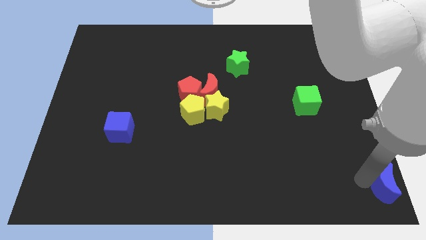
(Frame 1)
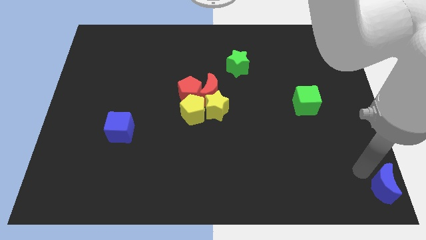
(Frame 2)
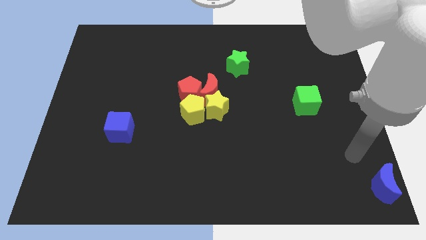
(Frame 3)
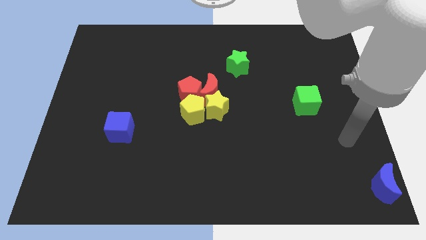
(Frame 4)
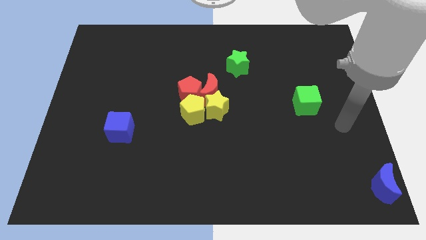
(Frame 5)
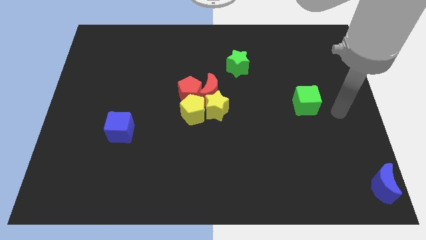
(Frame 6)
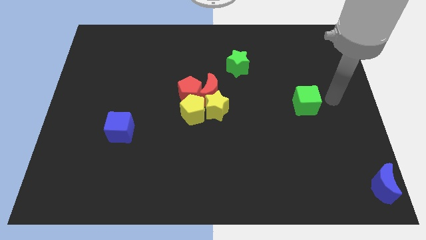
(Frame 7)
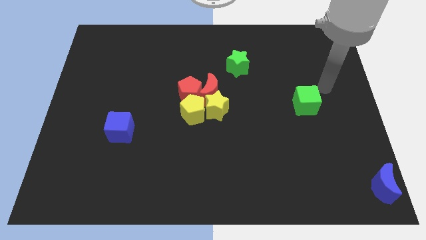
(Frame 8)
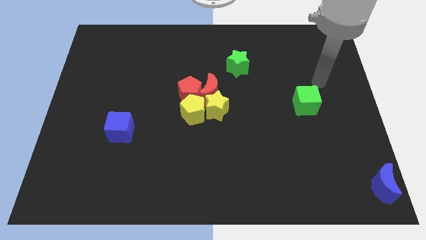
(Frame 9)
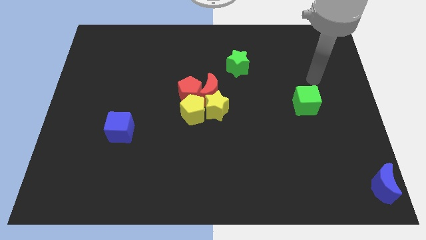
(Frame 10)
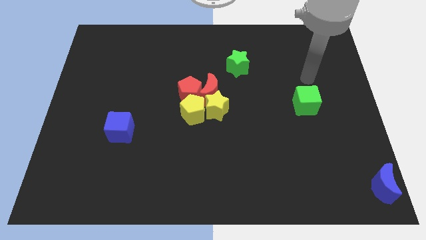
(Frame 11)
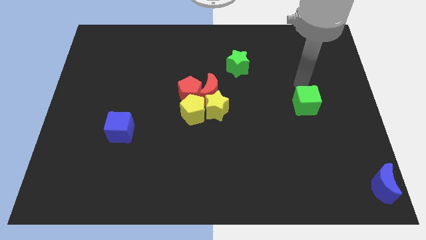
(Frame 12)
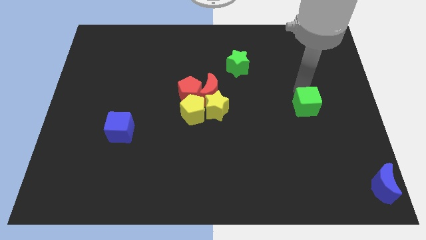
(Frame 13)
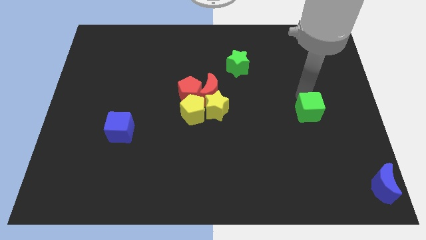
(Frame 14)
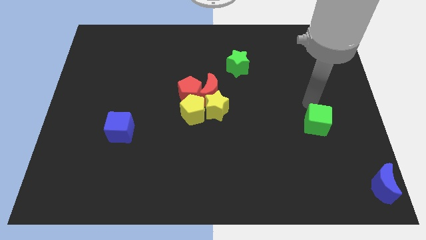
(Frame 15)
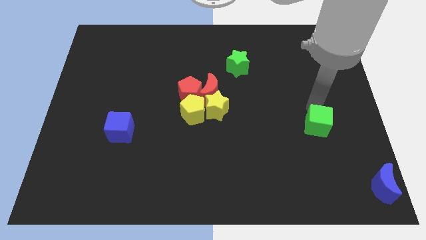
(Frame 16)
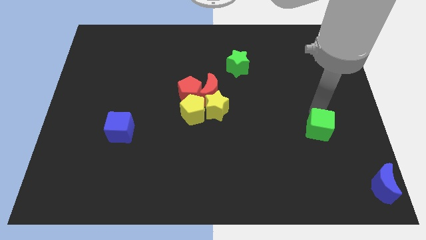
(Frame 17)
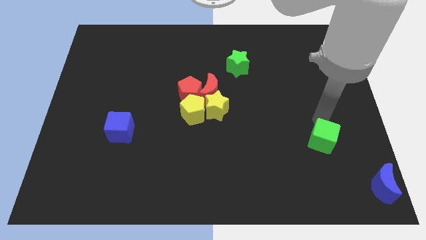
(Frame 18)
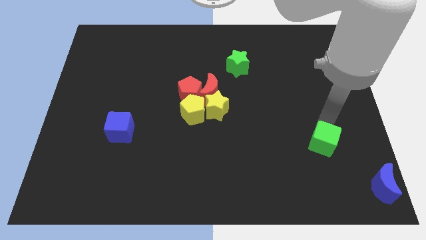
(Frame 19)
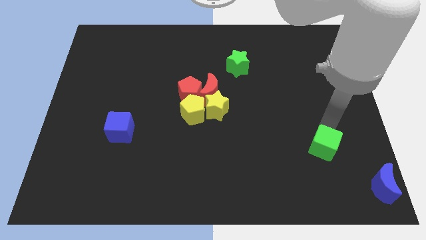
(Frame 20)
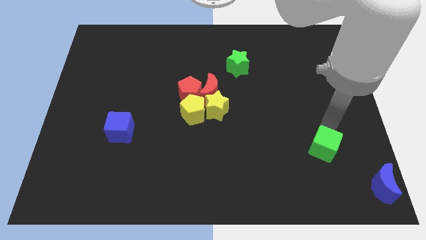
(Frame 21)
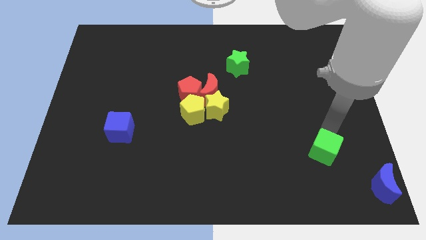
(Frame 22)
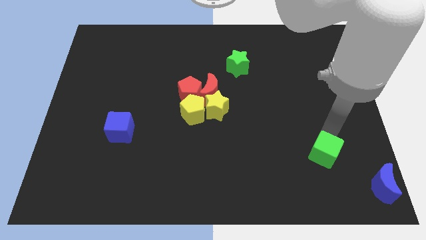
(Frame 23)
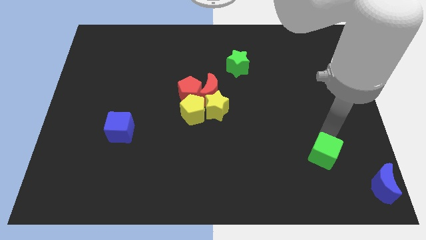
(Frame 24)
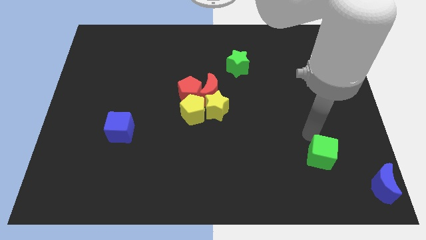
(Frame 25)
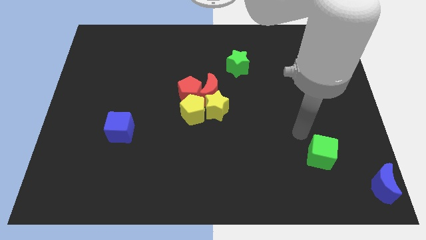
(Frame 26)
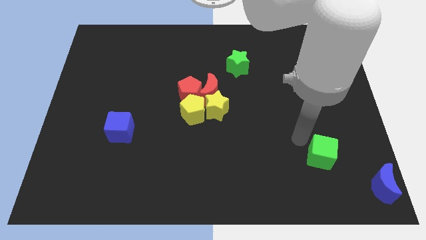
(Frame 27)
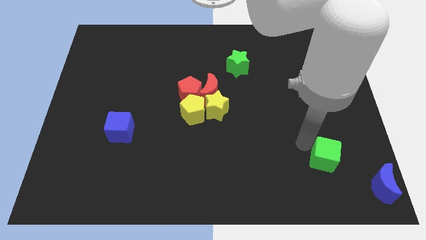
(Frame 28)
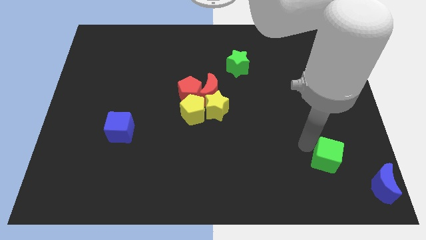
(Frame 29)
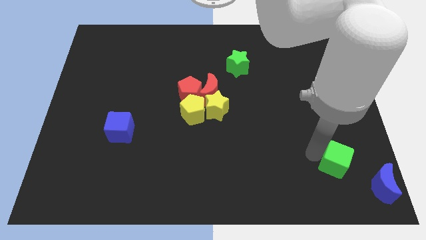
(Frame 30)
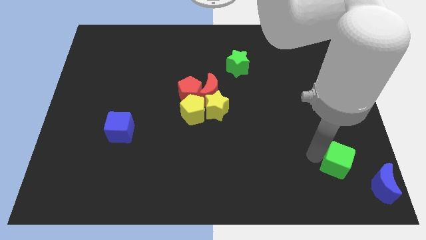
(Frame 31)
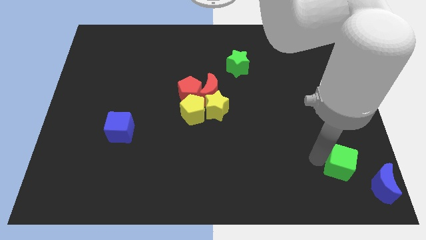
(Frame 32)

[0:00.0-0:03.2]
push the green cube towards the left side of the blue crescent

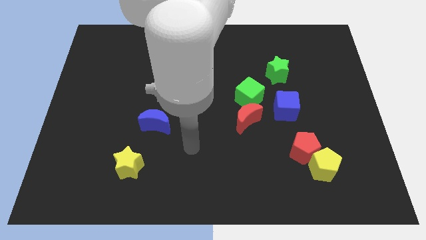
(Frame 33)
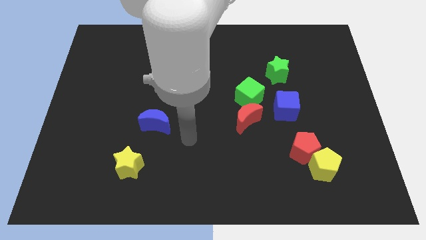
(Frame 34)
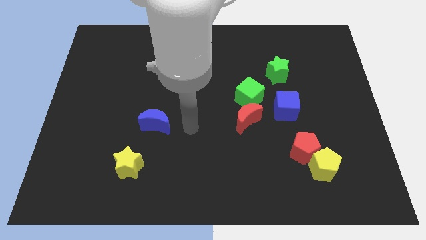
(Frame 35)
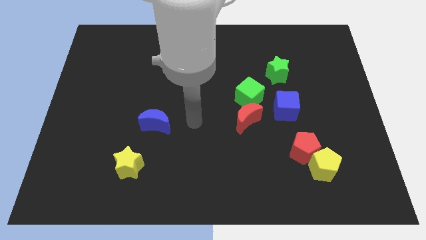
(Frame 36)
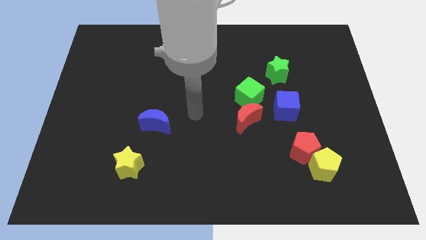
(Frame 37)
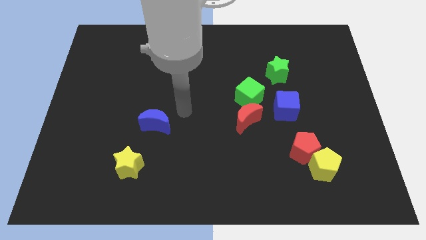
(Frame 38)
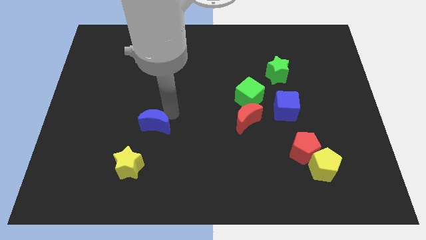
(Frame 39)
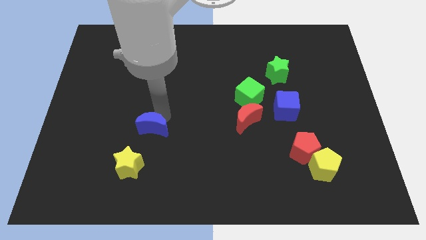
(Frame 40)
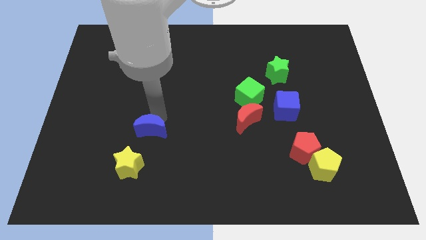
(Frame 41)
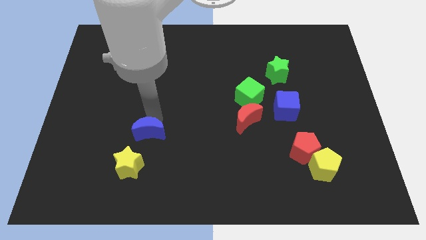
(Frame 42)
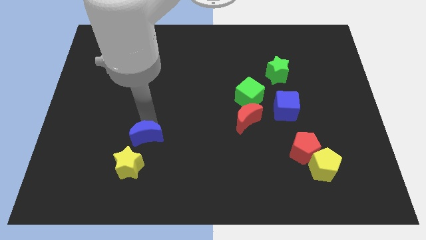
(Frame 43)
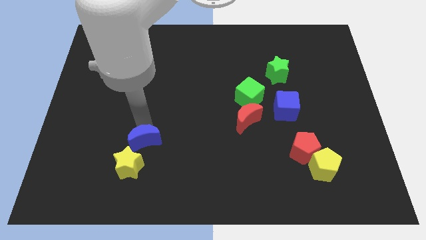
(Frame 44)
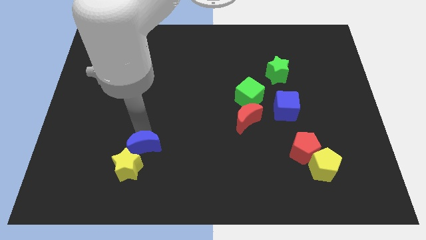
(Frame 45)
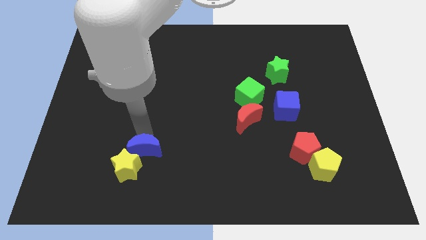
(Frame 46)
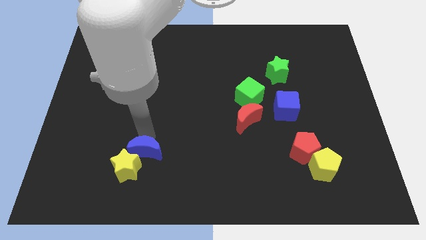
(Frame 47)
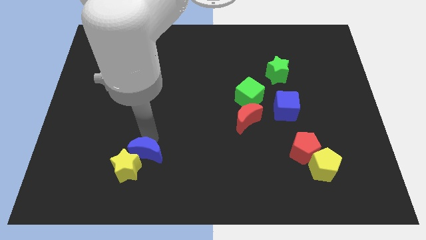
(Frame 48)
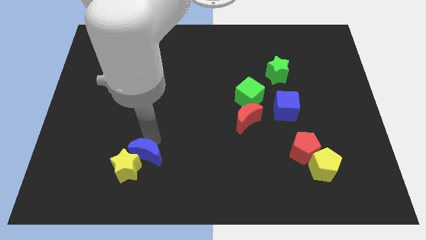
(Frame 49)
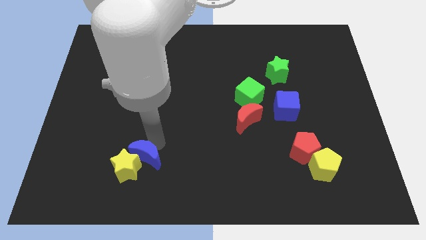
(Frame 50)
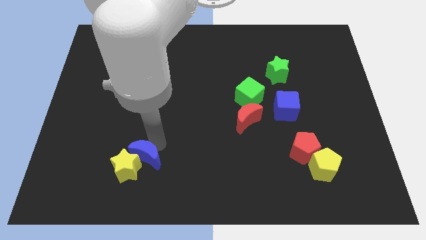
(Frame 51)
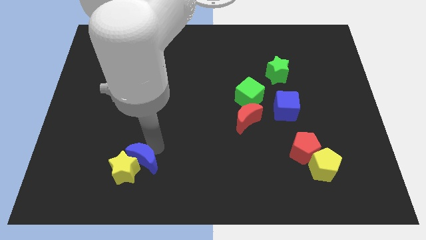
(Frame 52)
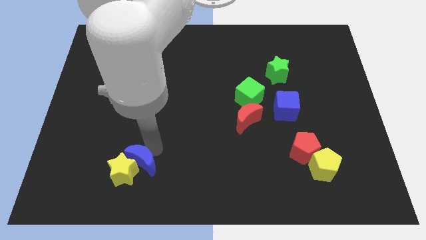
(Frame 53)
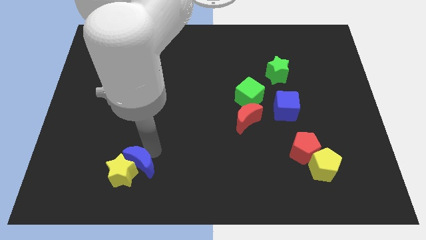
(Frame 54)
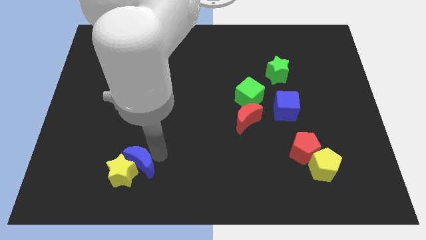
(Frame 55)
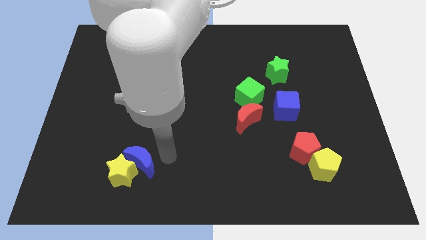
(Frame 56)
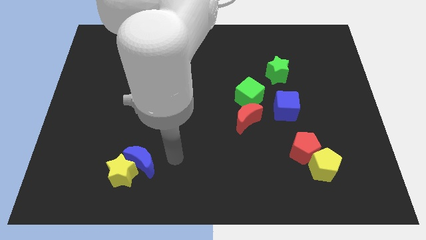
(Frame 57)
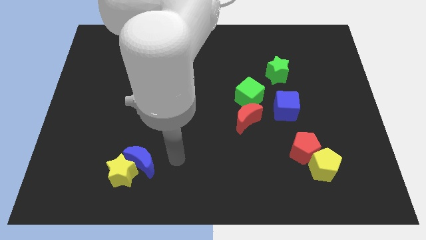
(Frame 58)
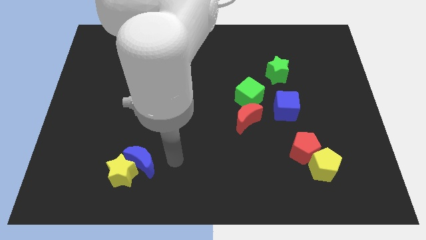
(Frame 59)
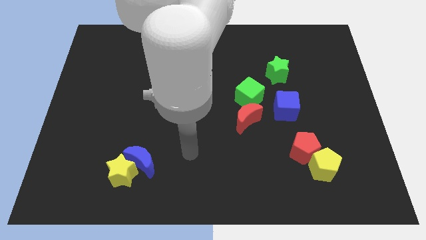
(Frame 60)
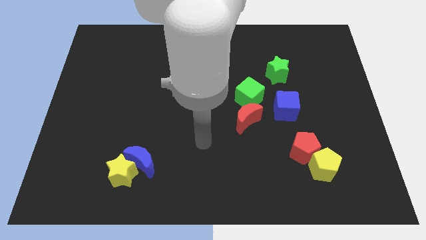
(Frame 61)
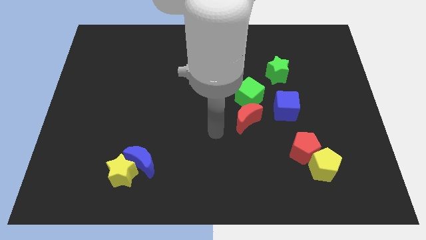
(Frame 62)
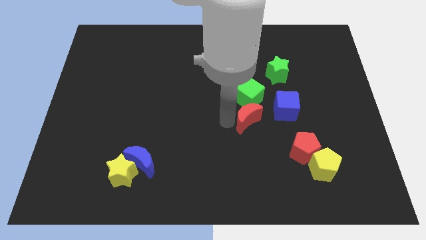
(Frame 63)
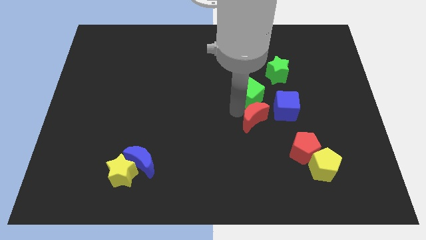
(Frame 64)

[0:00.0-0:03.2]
move the blue crescent into the yellow star

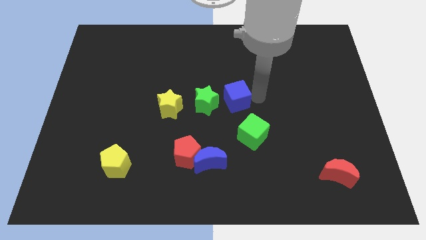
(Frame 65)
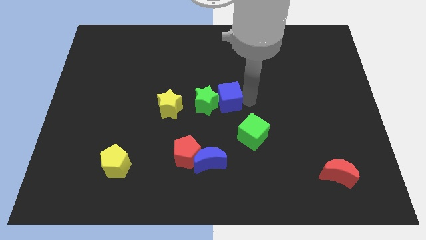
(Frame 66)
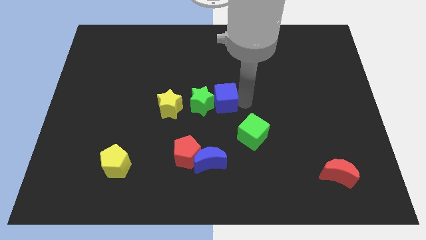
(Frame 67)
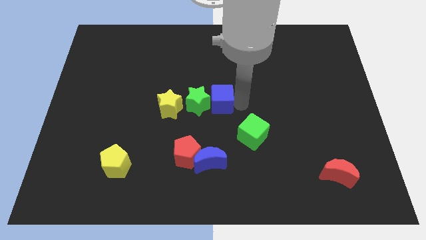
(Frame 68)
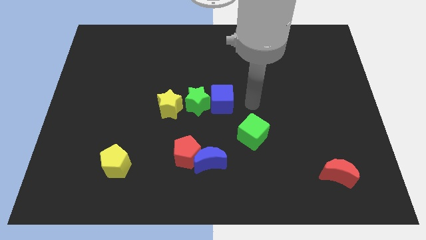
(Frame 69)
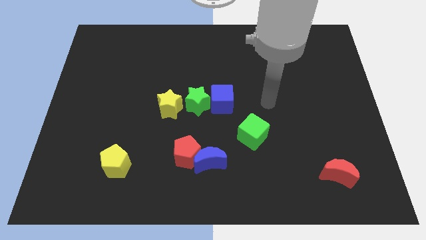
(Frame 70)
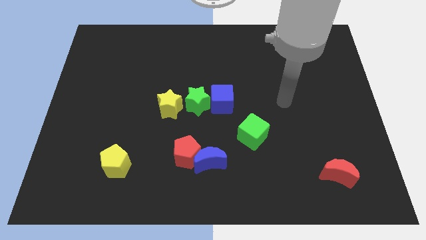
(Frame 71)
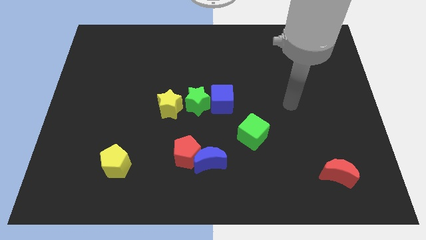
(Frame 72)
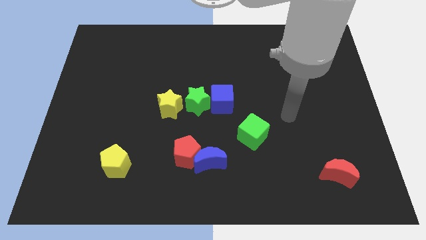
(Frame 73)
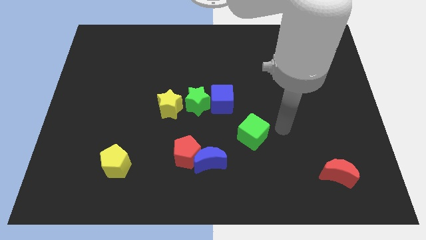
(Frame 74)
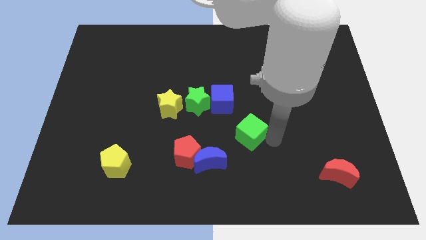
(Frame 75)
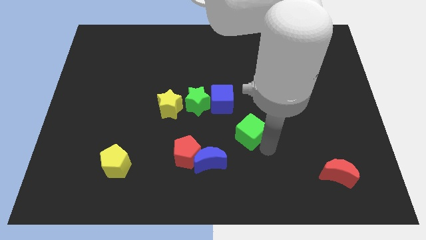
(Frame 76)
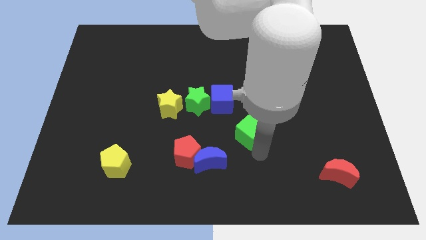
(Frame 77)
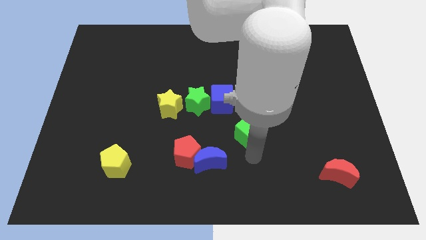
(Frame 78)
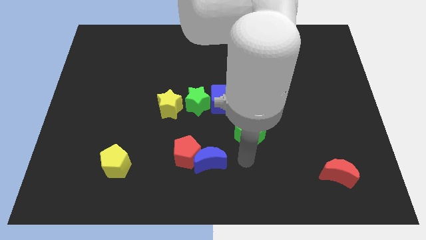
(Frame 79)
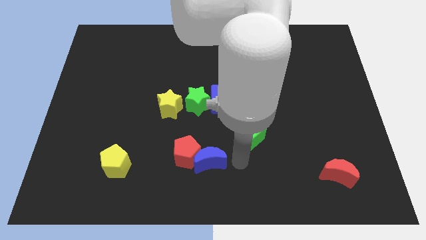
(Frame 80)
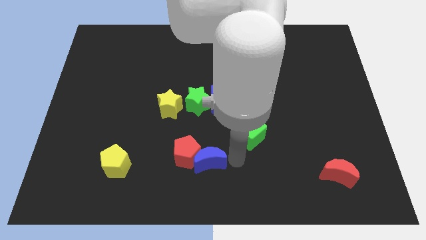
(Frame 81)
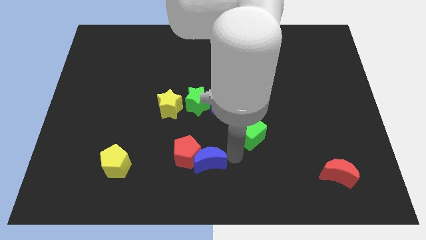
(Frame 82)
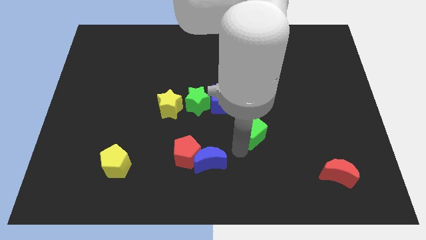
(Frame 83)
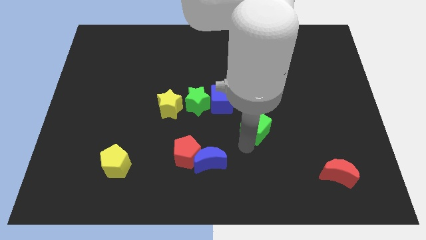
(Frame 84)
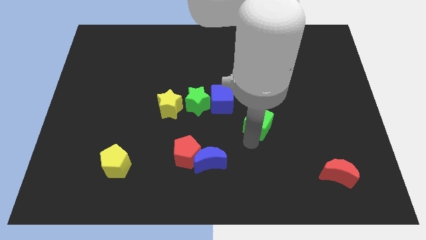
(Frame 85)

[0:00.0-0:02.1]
move the blue cube into the green star

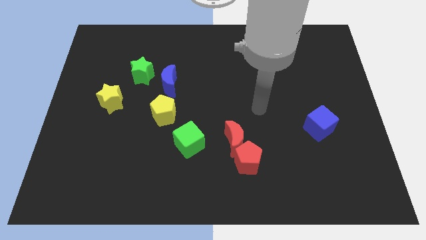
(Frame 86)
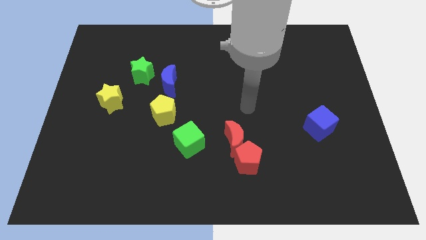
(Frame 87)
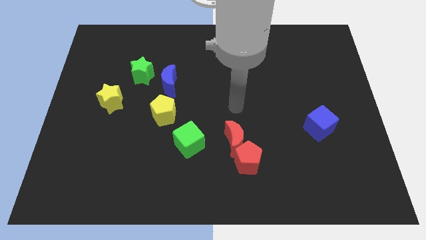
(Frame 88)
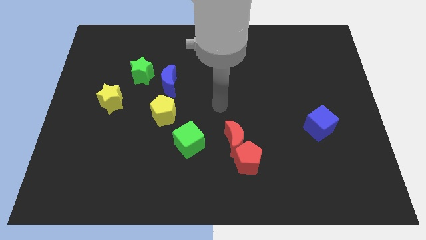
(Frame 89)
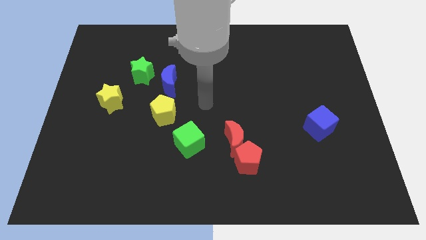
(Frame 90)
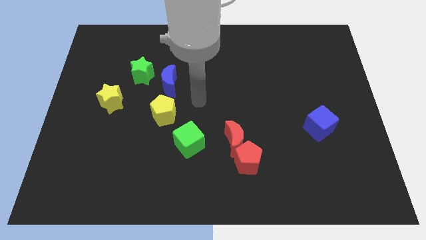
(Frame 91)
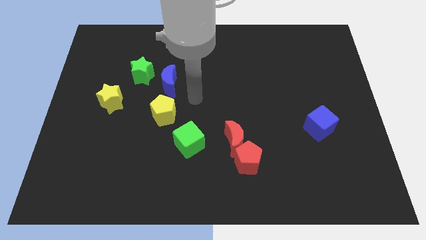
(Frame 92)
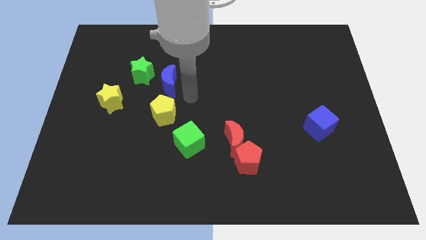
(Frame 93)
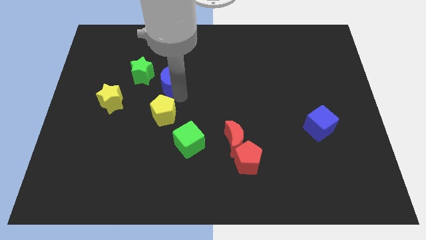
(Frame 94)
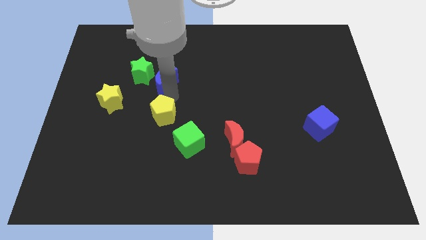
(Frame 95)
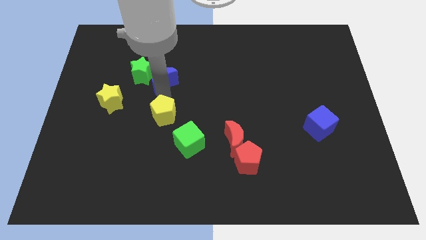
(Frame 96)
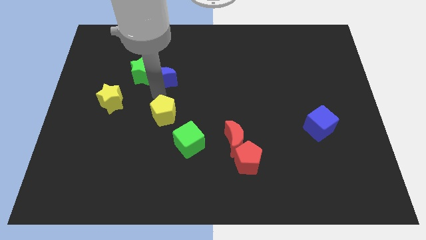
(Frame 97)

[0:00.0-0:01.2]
place your arm between blue moon and yellow pentagon
